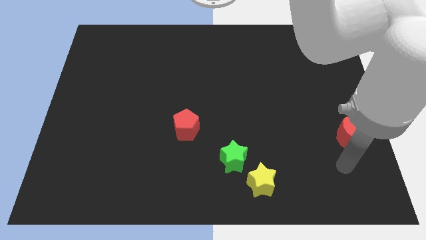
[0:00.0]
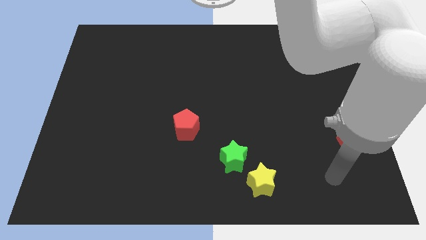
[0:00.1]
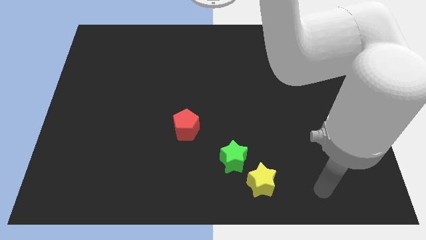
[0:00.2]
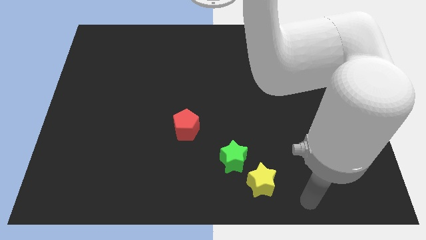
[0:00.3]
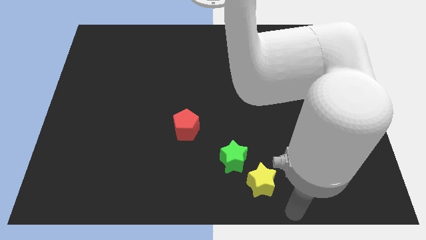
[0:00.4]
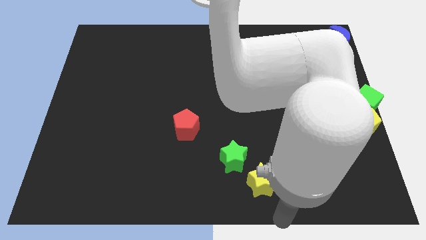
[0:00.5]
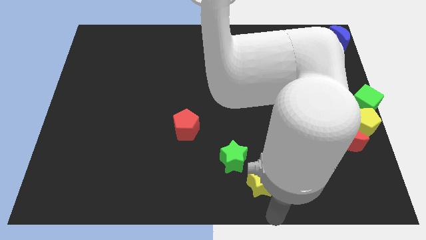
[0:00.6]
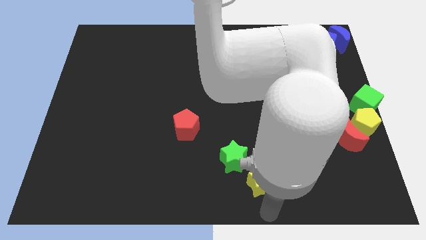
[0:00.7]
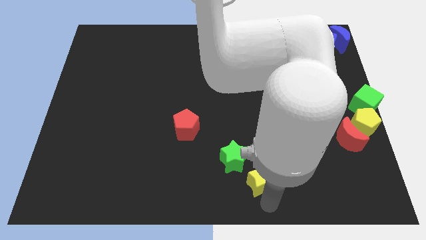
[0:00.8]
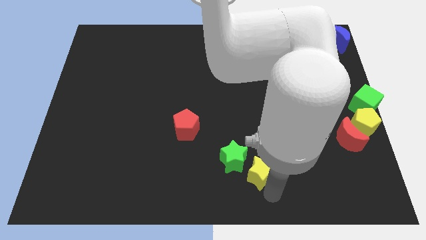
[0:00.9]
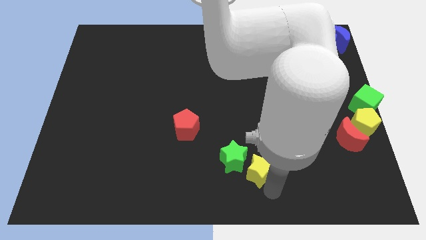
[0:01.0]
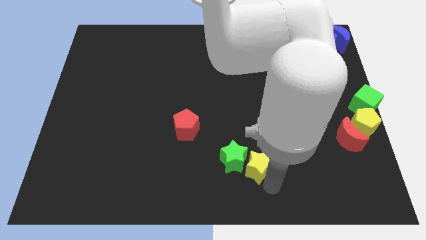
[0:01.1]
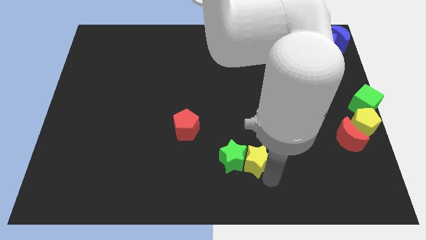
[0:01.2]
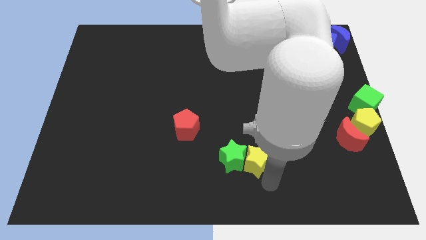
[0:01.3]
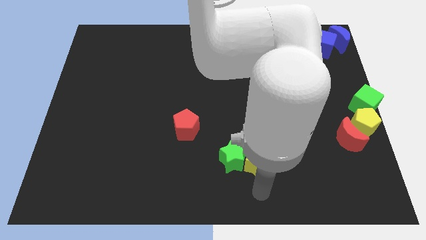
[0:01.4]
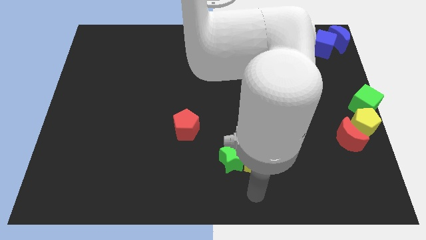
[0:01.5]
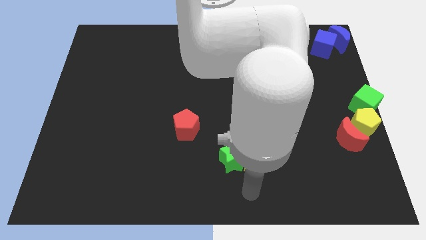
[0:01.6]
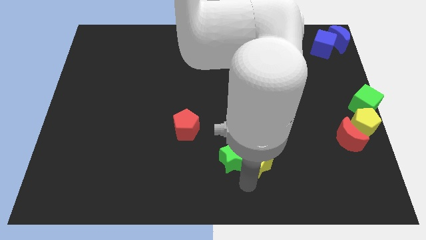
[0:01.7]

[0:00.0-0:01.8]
put the yellow and green stars together

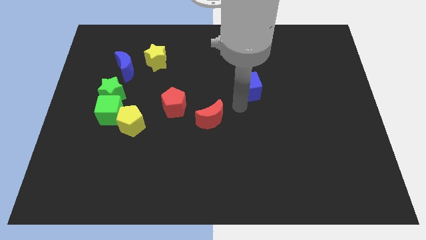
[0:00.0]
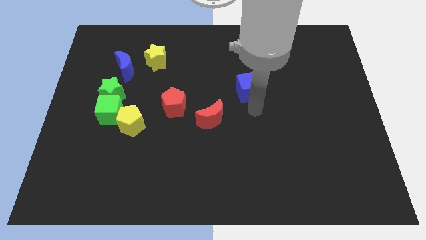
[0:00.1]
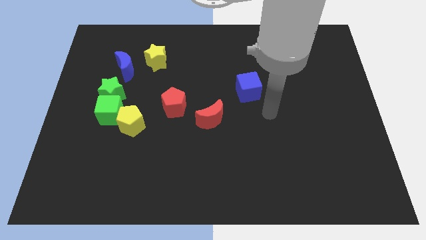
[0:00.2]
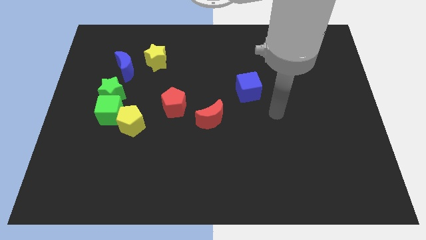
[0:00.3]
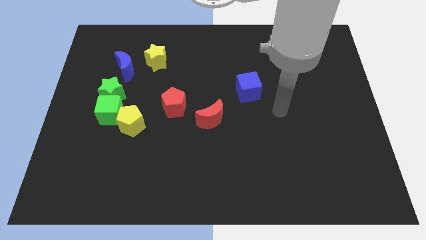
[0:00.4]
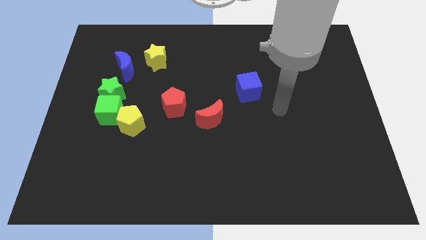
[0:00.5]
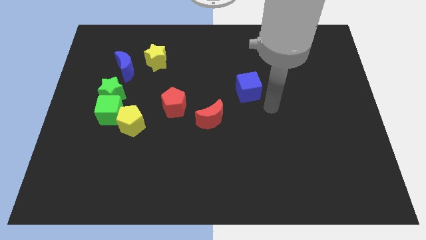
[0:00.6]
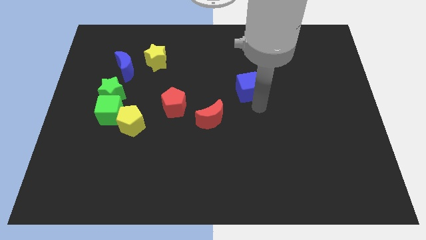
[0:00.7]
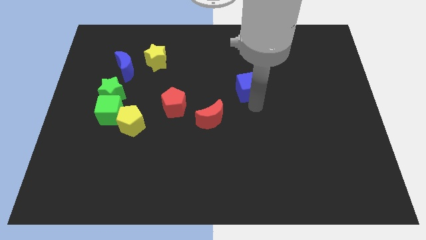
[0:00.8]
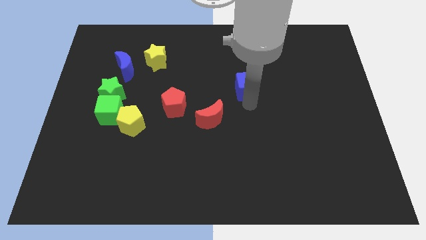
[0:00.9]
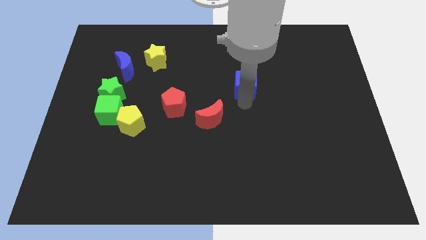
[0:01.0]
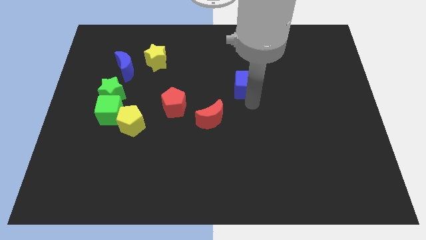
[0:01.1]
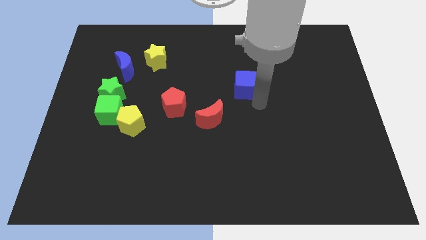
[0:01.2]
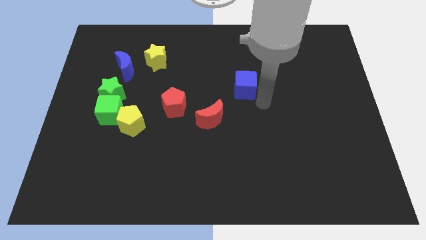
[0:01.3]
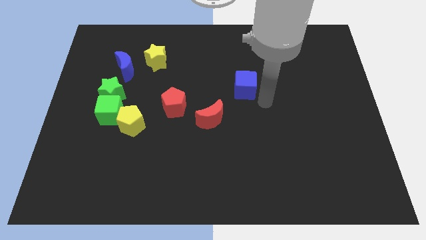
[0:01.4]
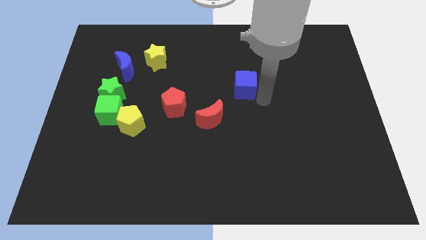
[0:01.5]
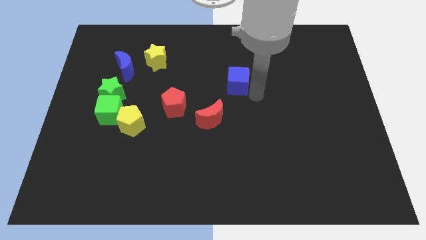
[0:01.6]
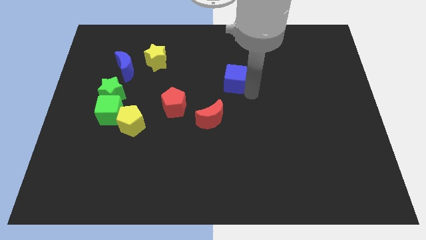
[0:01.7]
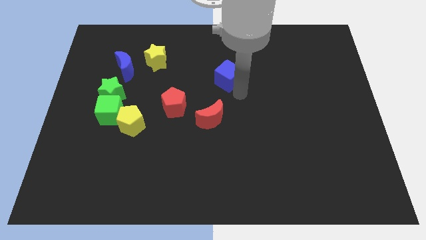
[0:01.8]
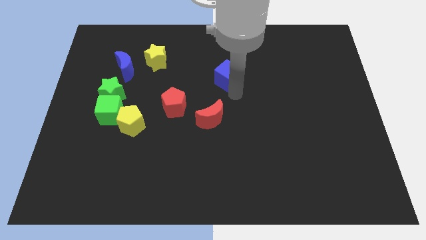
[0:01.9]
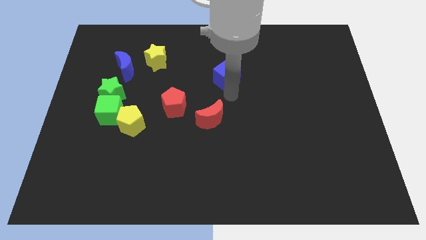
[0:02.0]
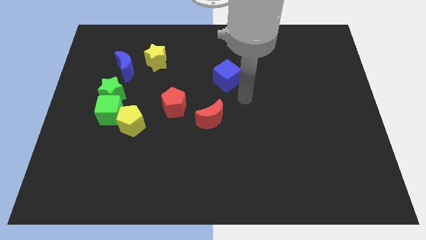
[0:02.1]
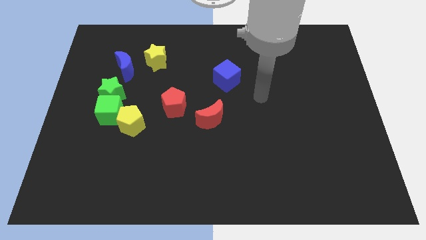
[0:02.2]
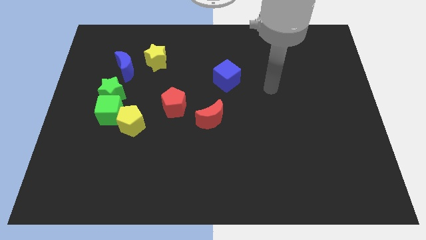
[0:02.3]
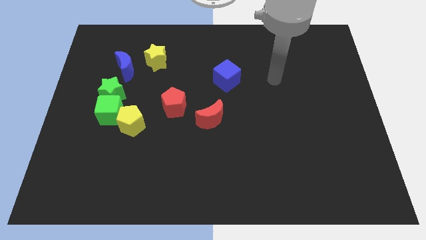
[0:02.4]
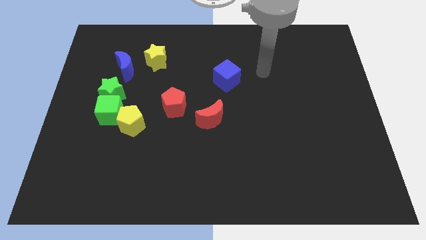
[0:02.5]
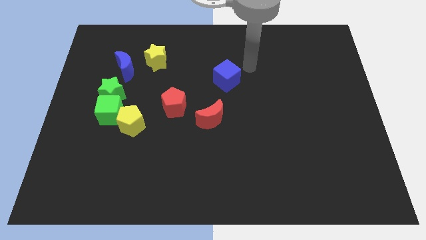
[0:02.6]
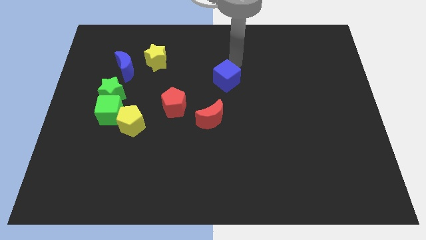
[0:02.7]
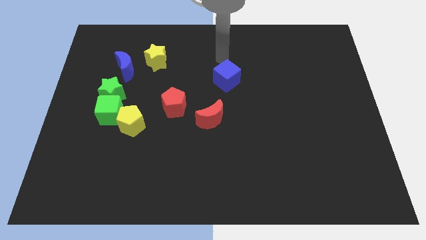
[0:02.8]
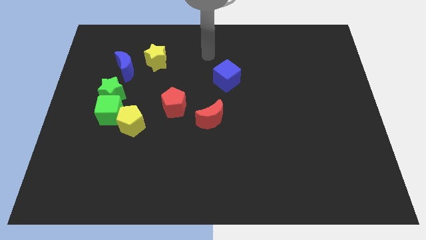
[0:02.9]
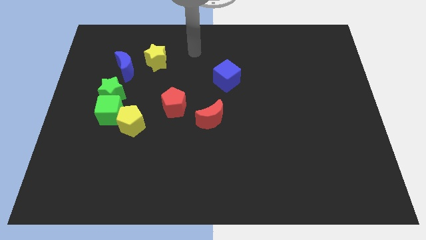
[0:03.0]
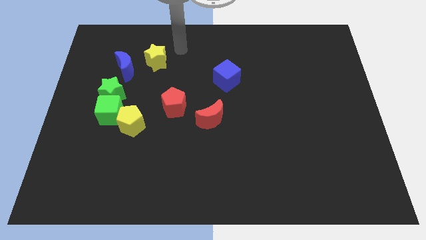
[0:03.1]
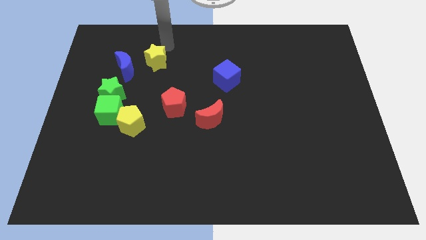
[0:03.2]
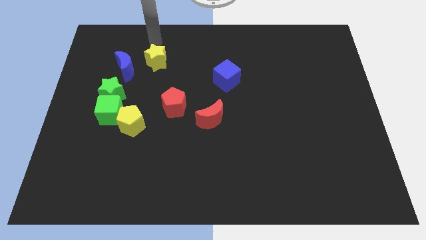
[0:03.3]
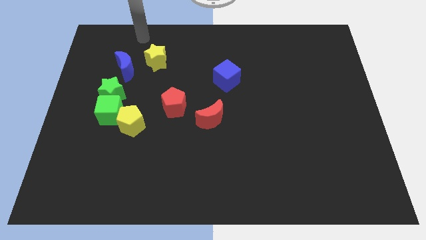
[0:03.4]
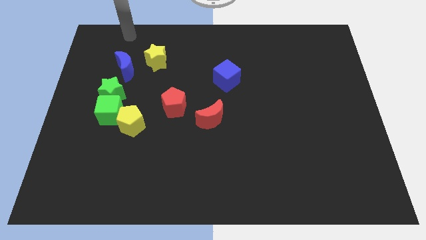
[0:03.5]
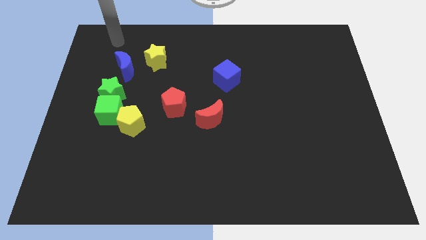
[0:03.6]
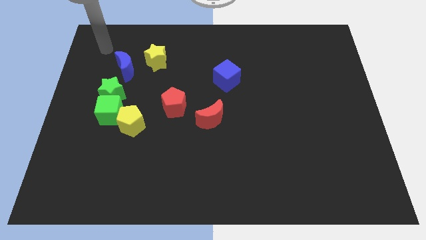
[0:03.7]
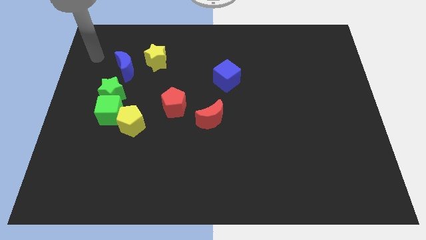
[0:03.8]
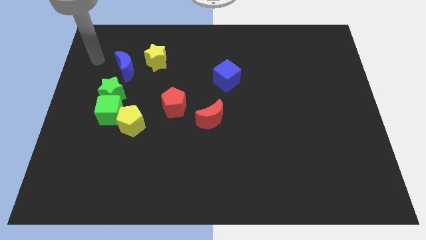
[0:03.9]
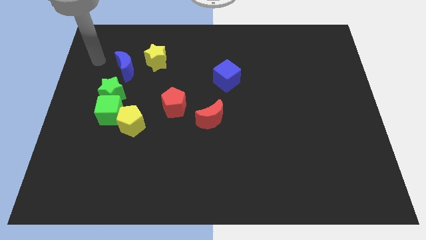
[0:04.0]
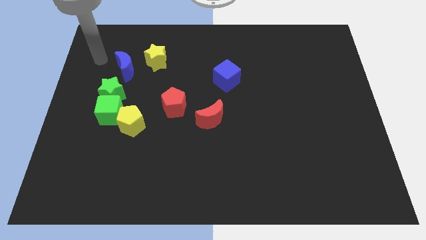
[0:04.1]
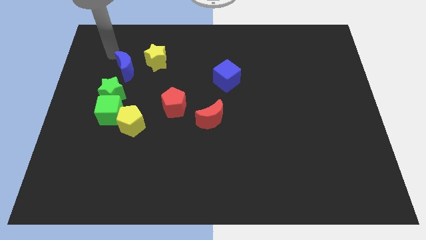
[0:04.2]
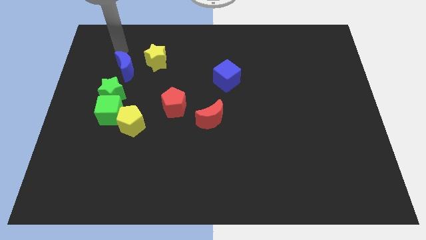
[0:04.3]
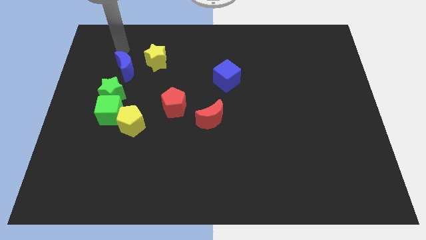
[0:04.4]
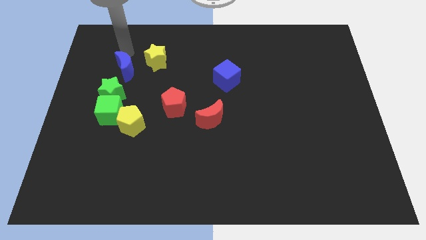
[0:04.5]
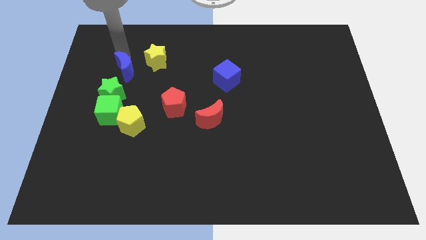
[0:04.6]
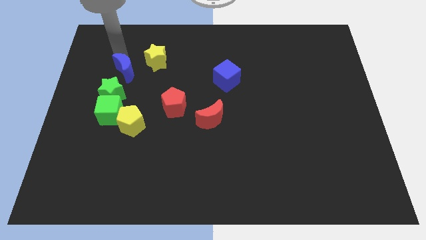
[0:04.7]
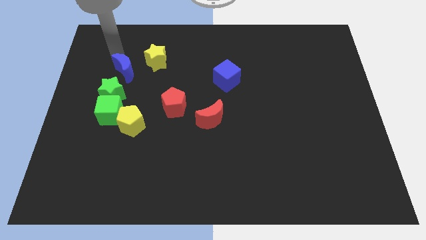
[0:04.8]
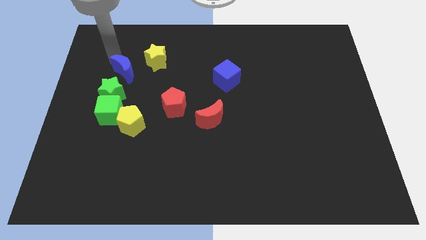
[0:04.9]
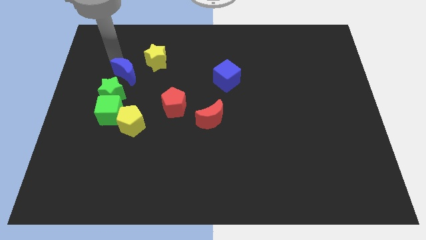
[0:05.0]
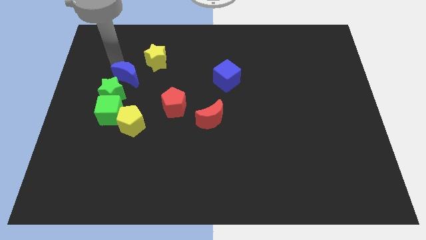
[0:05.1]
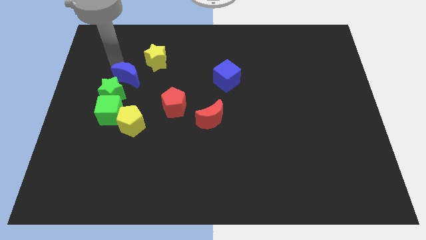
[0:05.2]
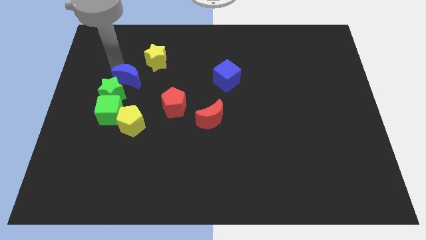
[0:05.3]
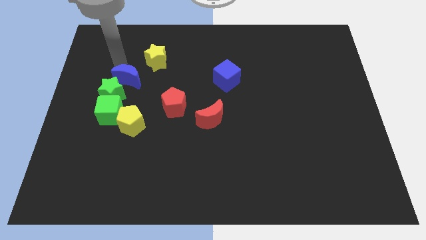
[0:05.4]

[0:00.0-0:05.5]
line up the blue cube and blue crescent horizontally

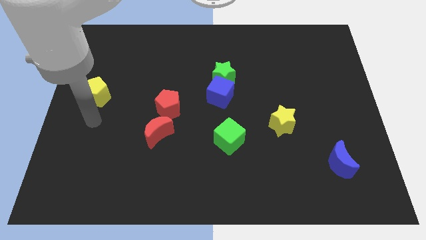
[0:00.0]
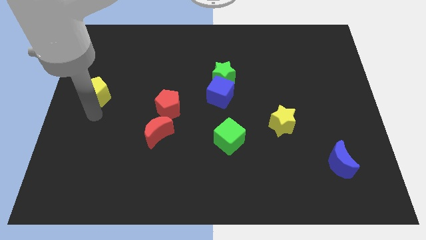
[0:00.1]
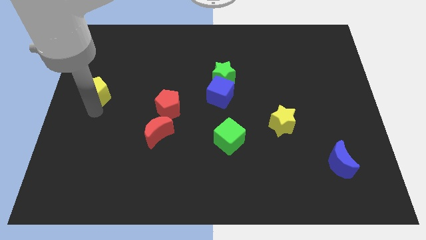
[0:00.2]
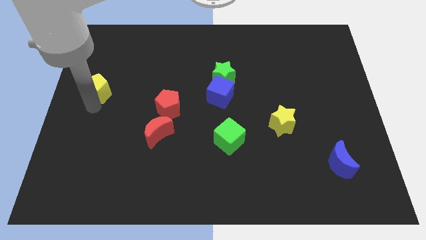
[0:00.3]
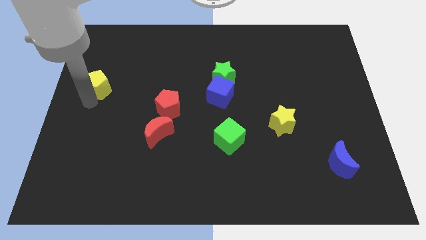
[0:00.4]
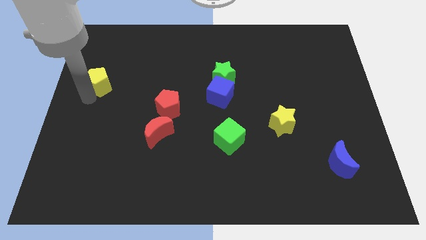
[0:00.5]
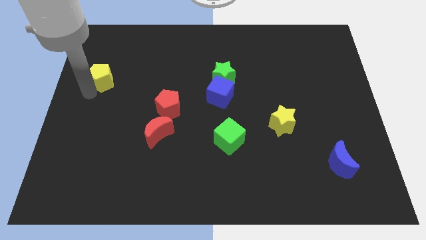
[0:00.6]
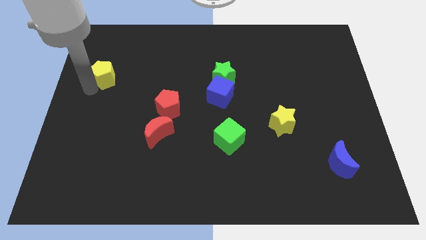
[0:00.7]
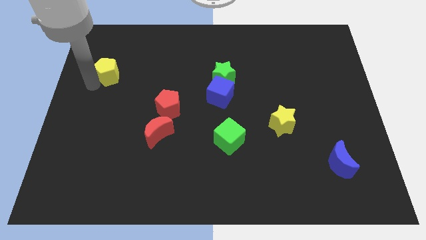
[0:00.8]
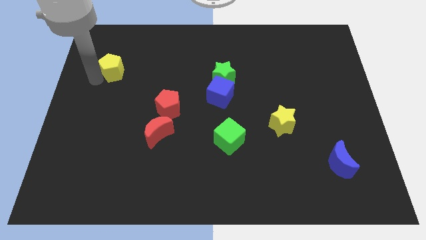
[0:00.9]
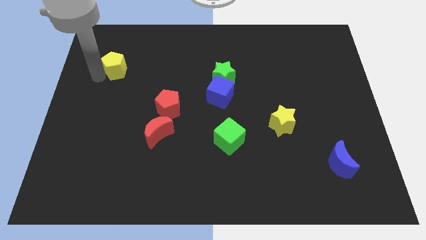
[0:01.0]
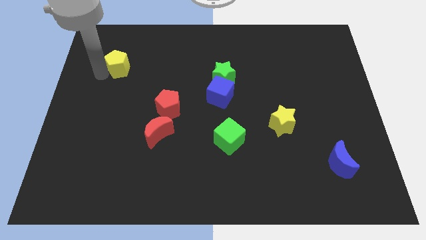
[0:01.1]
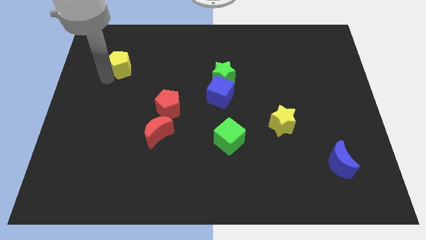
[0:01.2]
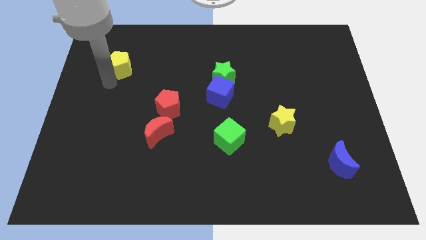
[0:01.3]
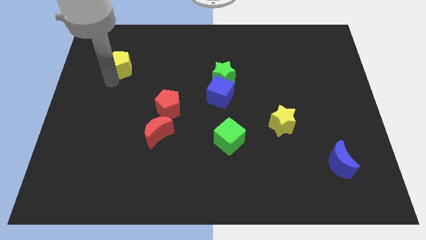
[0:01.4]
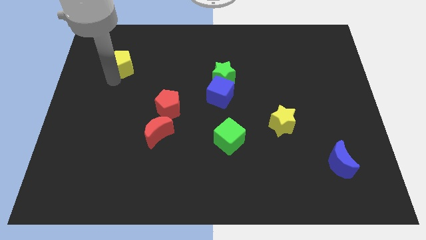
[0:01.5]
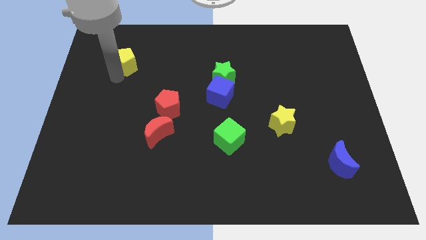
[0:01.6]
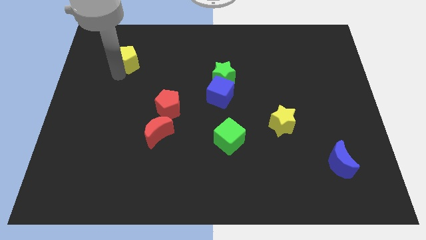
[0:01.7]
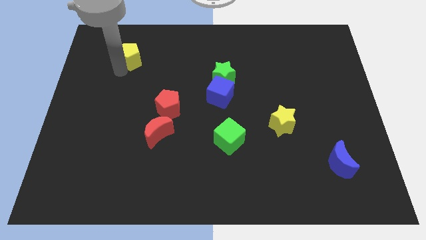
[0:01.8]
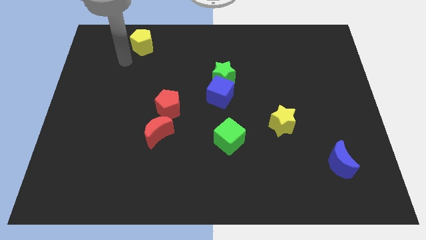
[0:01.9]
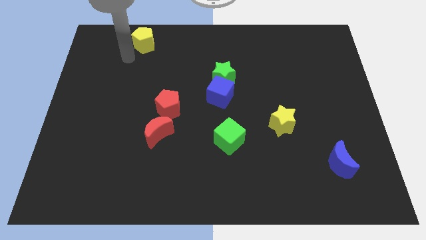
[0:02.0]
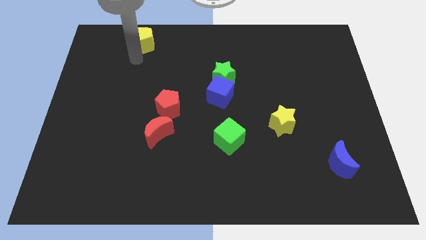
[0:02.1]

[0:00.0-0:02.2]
push the yellow pentagon towards the top
